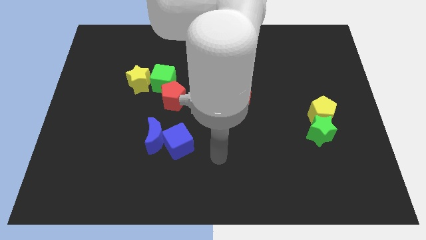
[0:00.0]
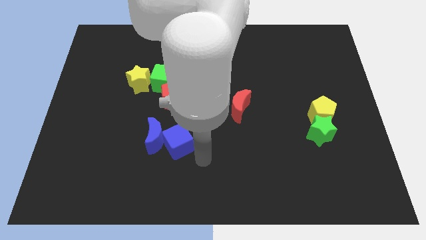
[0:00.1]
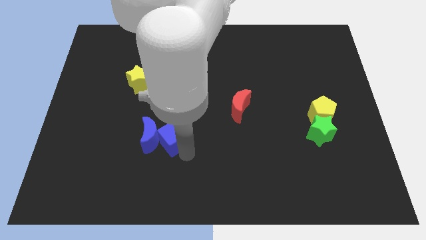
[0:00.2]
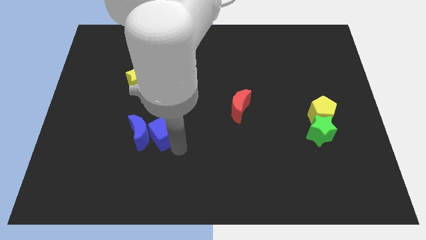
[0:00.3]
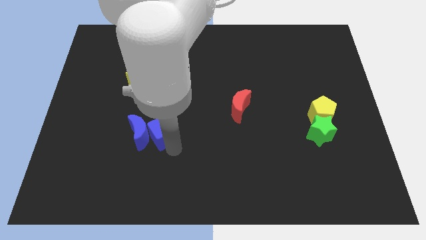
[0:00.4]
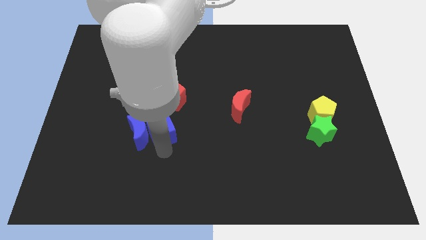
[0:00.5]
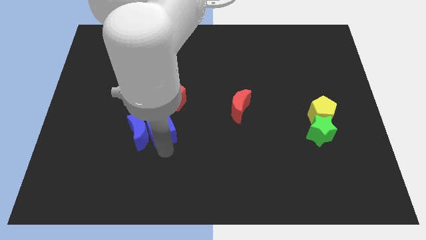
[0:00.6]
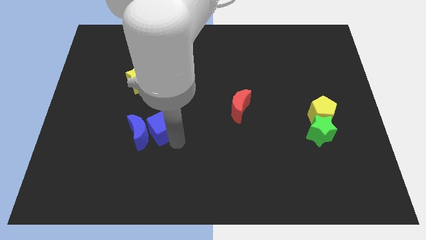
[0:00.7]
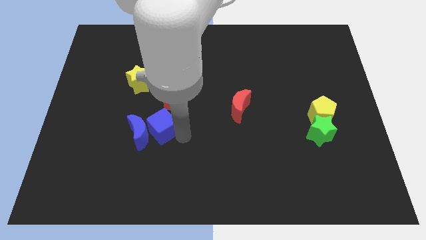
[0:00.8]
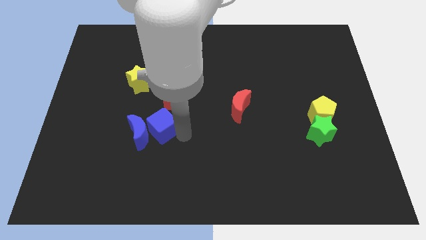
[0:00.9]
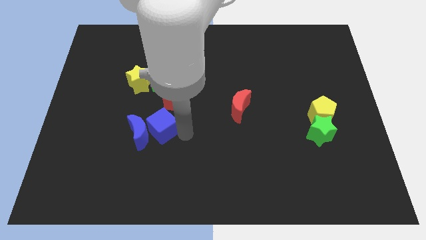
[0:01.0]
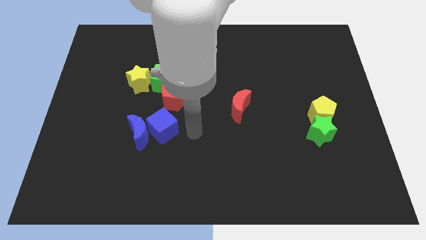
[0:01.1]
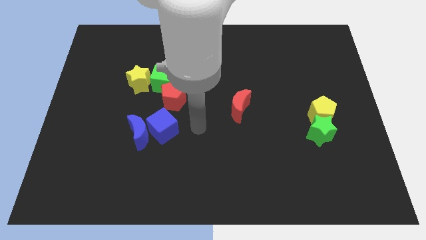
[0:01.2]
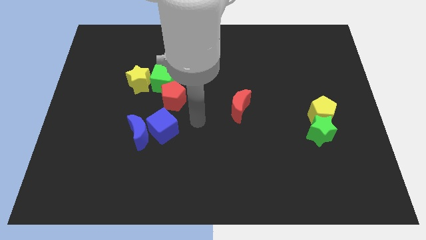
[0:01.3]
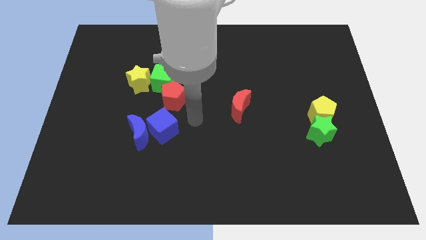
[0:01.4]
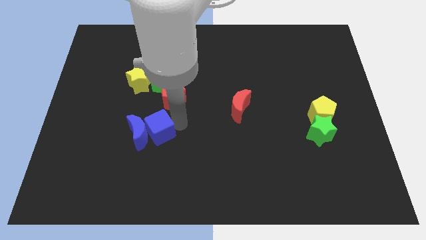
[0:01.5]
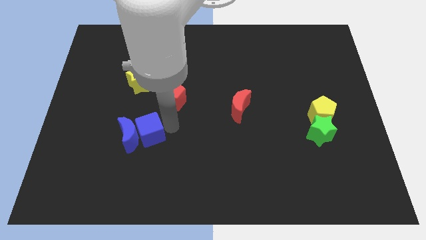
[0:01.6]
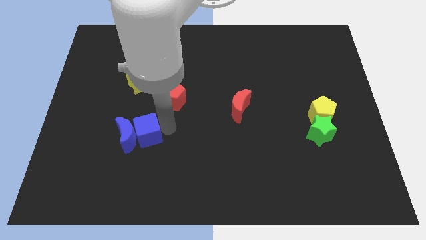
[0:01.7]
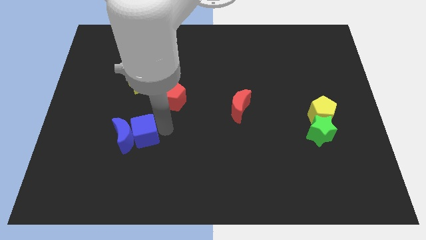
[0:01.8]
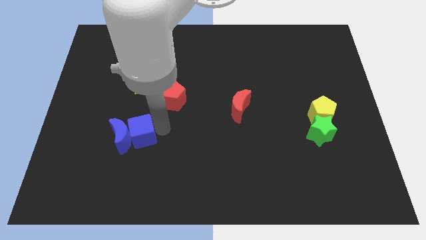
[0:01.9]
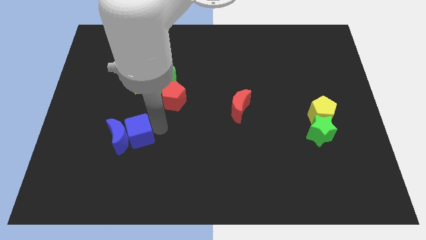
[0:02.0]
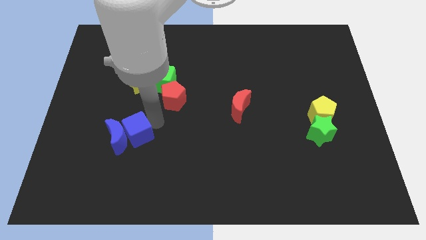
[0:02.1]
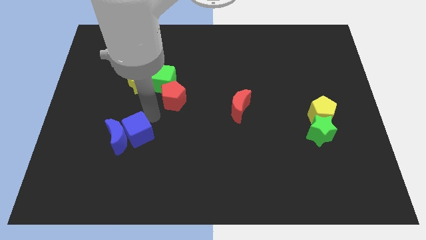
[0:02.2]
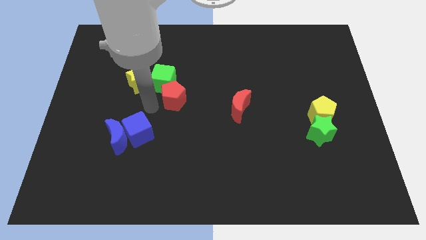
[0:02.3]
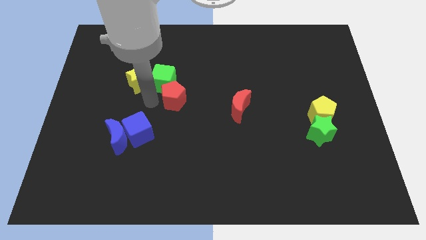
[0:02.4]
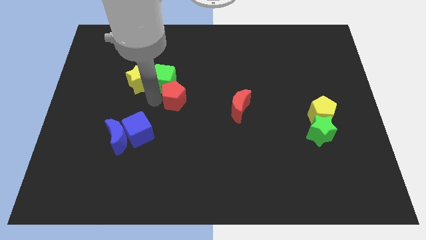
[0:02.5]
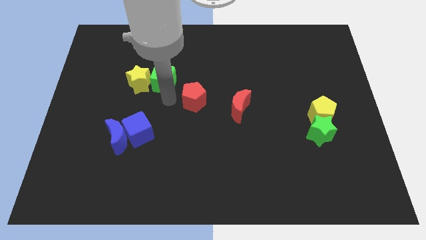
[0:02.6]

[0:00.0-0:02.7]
push blue cube and blue moon towards left

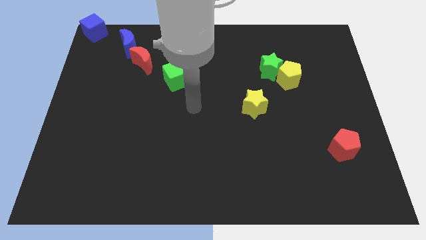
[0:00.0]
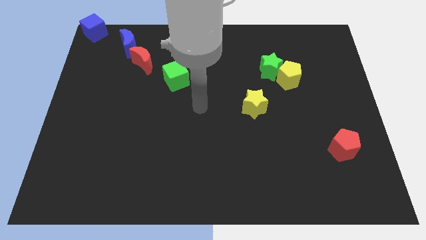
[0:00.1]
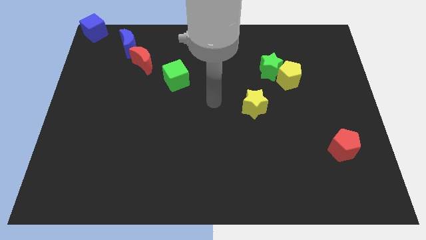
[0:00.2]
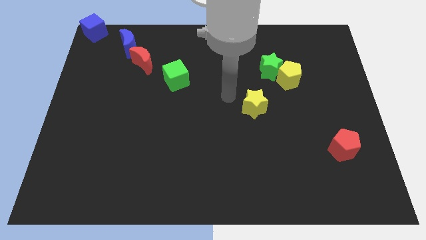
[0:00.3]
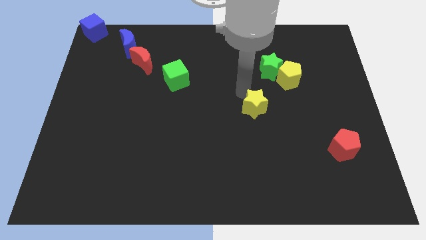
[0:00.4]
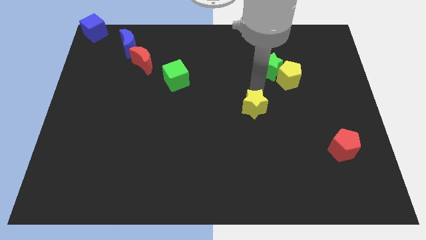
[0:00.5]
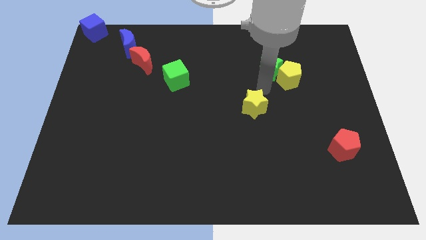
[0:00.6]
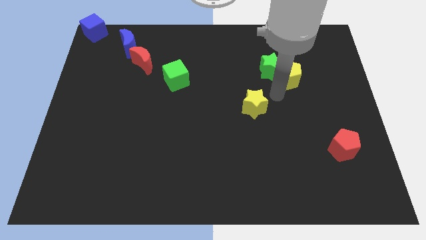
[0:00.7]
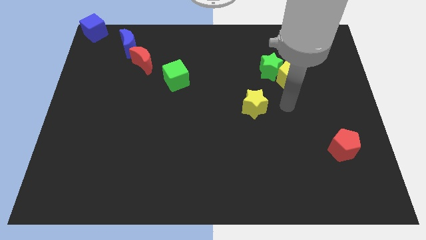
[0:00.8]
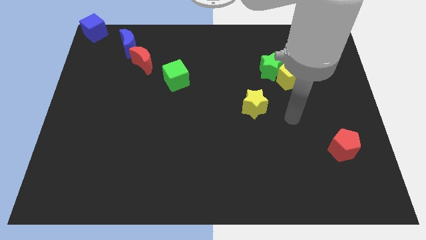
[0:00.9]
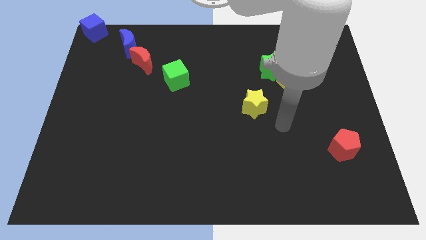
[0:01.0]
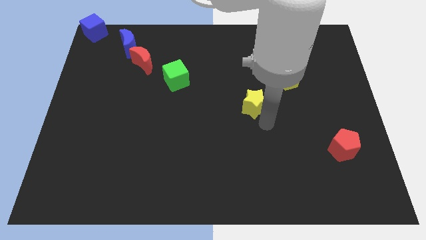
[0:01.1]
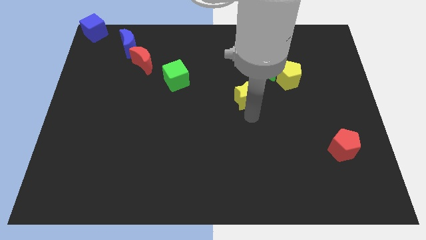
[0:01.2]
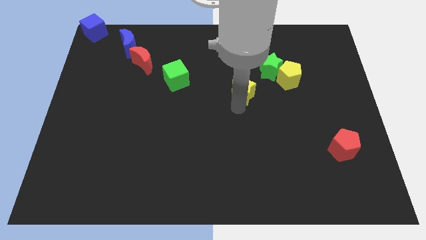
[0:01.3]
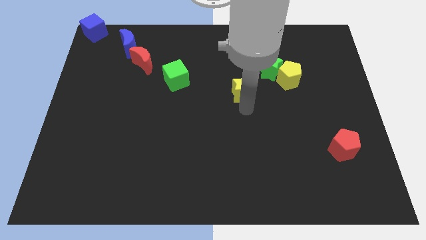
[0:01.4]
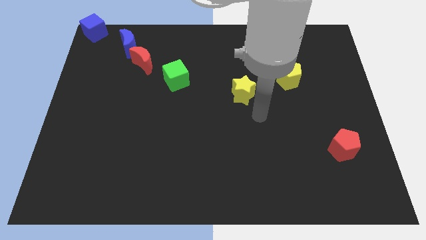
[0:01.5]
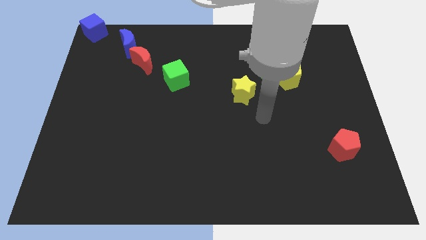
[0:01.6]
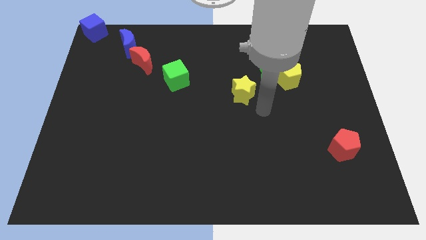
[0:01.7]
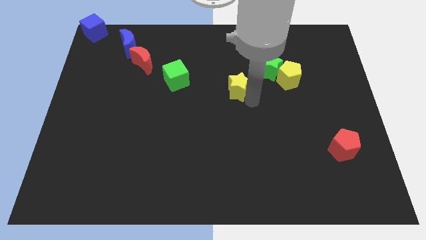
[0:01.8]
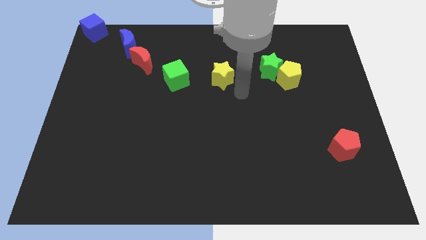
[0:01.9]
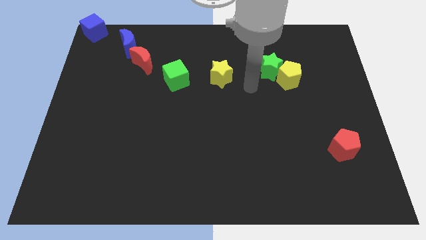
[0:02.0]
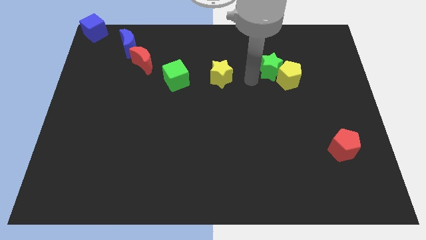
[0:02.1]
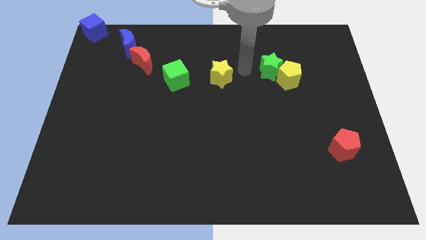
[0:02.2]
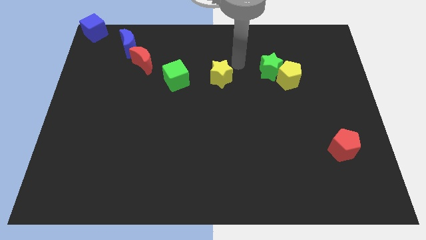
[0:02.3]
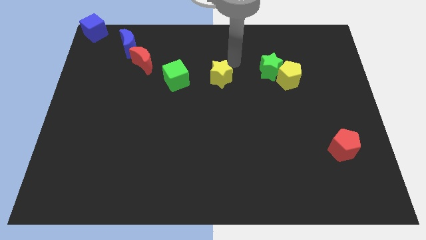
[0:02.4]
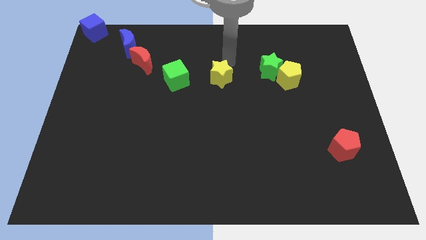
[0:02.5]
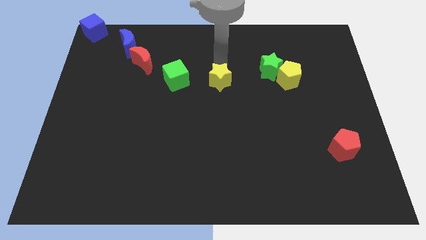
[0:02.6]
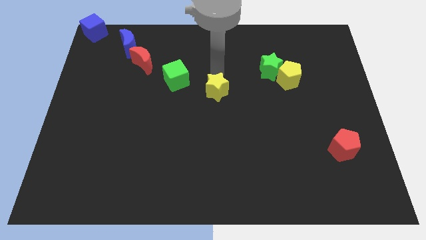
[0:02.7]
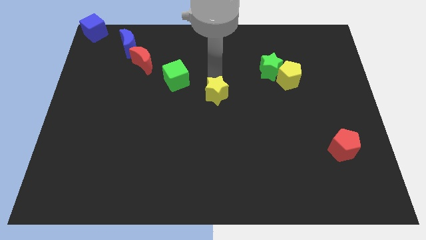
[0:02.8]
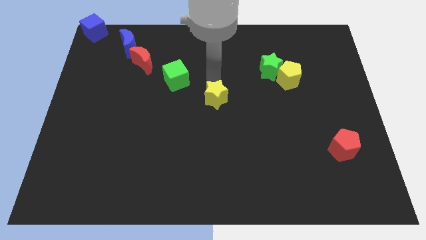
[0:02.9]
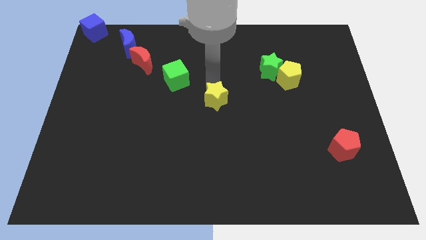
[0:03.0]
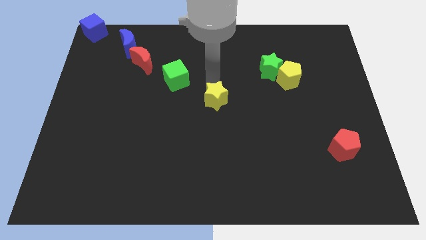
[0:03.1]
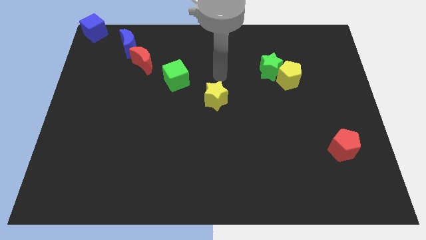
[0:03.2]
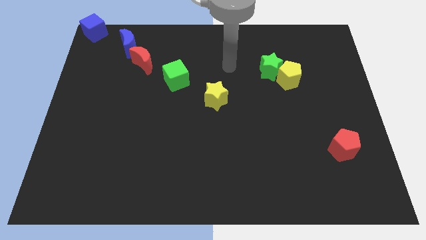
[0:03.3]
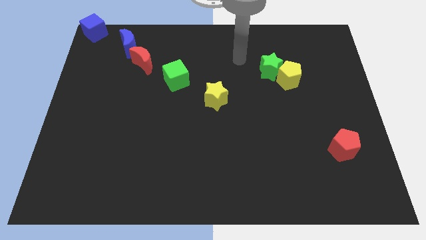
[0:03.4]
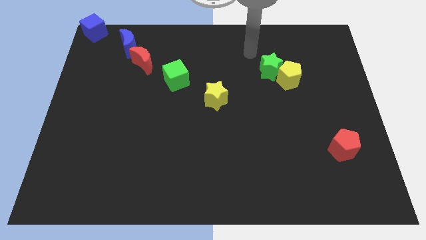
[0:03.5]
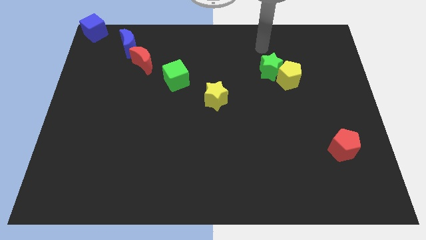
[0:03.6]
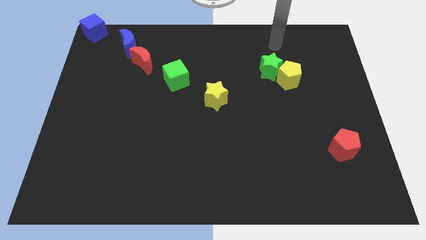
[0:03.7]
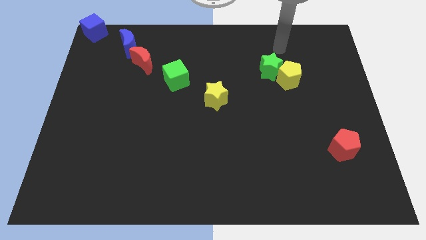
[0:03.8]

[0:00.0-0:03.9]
put the yellow star bottom right side of the green cube

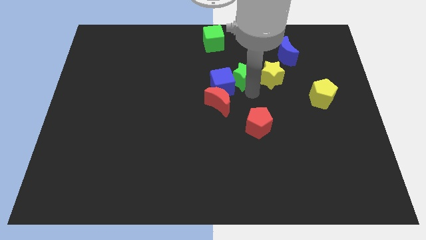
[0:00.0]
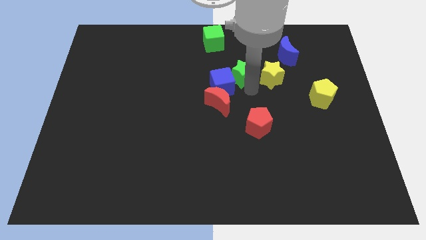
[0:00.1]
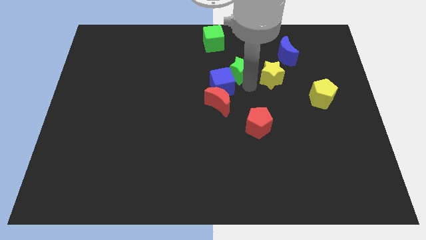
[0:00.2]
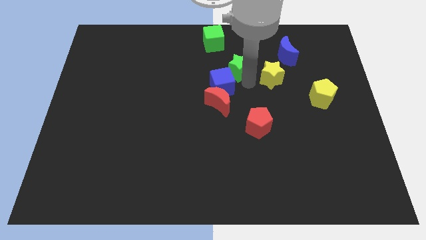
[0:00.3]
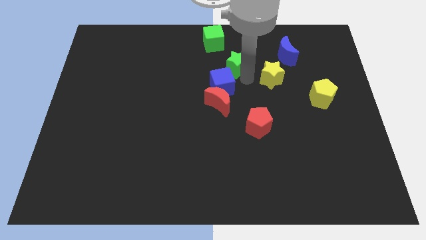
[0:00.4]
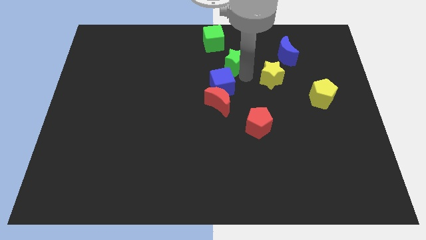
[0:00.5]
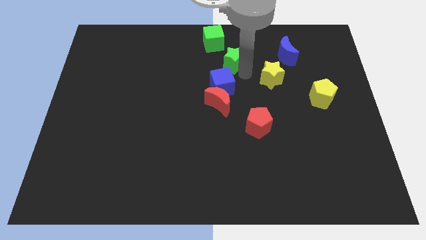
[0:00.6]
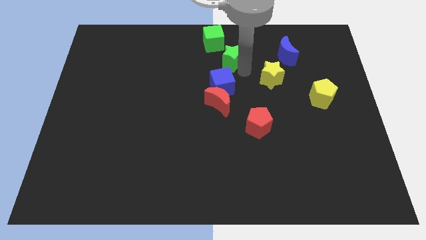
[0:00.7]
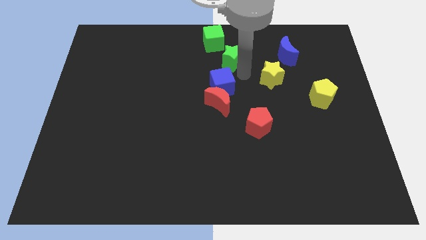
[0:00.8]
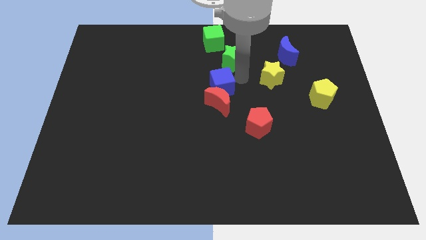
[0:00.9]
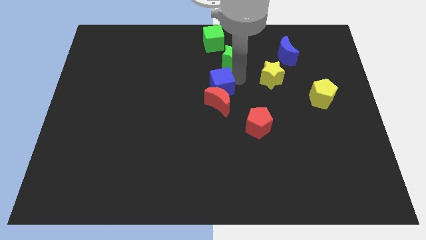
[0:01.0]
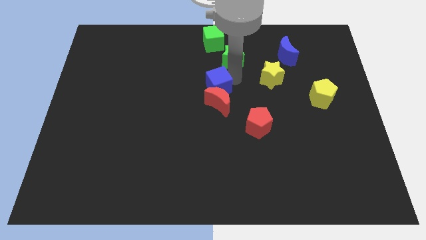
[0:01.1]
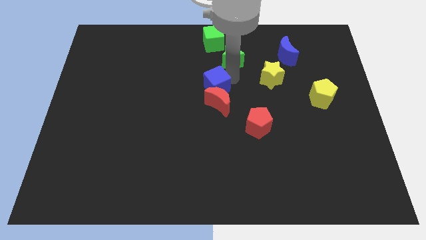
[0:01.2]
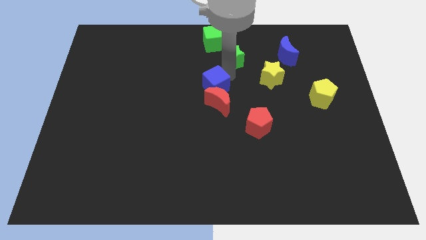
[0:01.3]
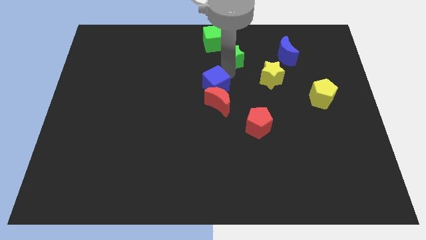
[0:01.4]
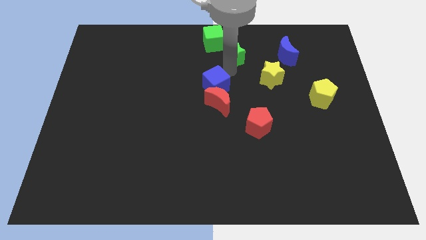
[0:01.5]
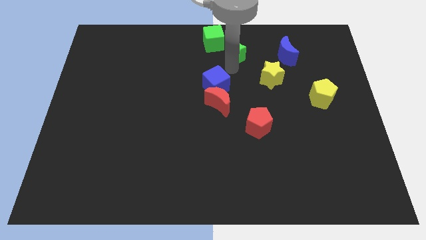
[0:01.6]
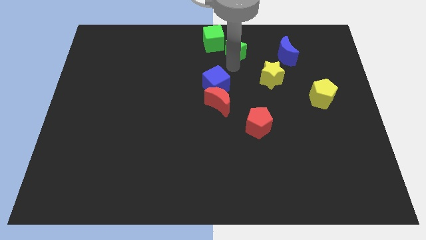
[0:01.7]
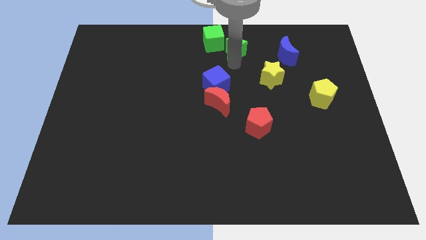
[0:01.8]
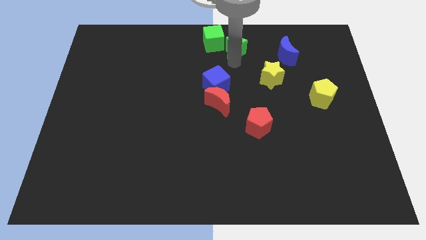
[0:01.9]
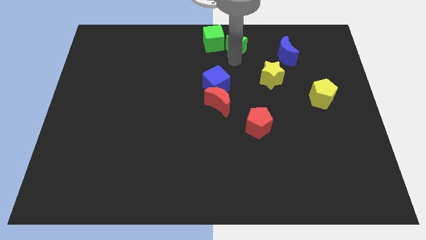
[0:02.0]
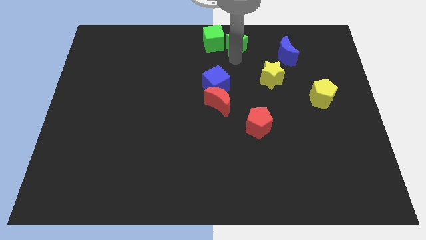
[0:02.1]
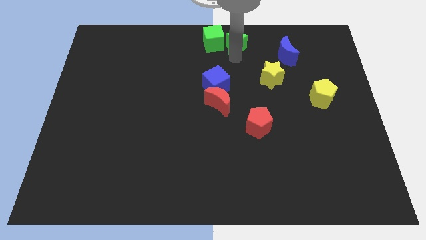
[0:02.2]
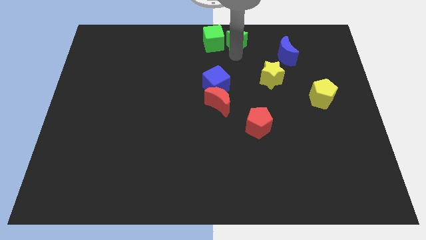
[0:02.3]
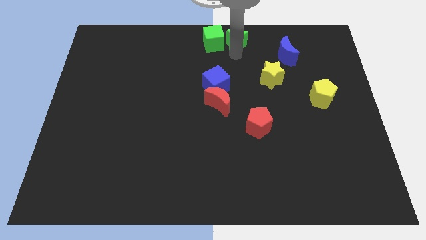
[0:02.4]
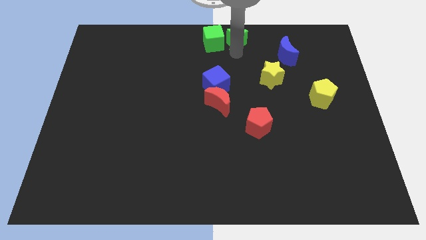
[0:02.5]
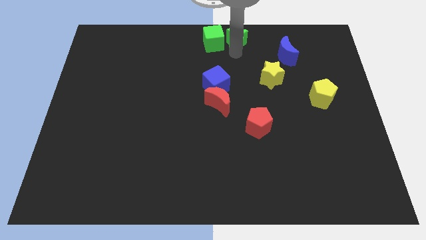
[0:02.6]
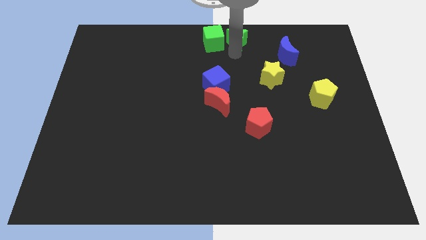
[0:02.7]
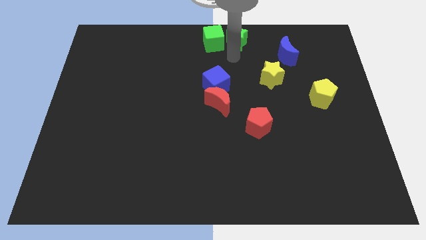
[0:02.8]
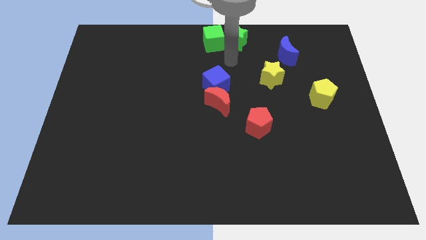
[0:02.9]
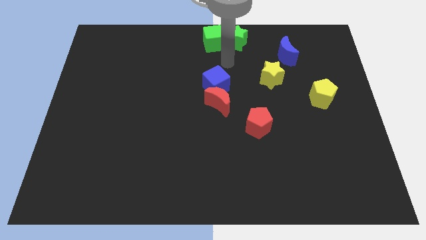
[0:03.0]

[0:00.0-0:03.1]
move the green star to the right of green cube
